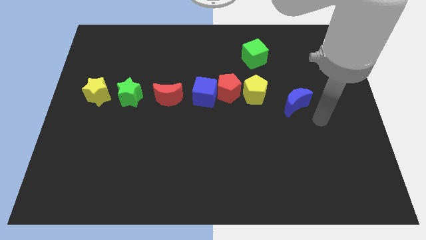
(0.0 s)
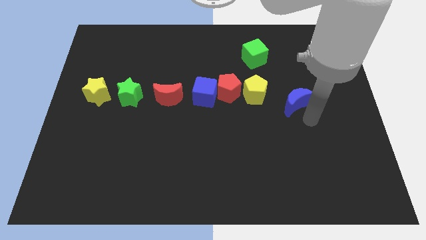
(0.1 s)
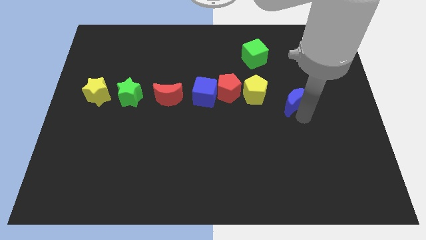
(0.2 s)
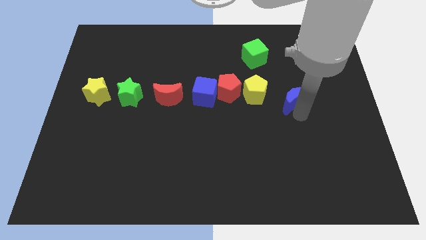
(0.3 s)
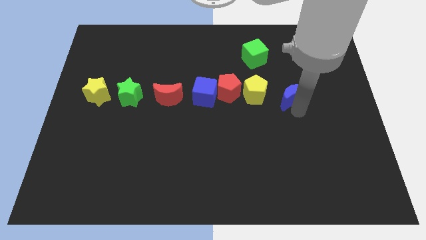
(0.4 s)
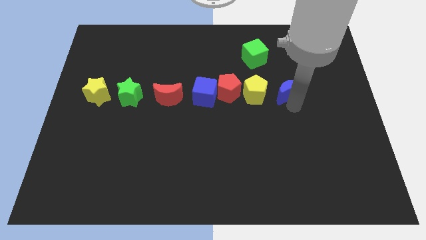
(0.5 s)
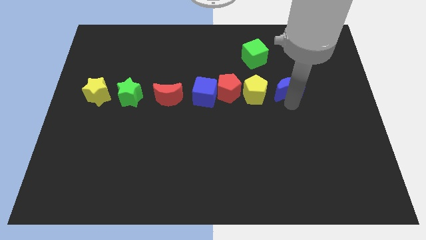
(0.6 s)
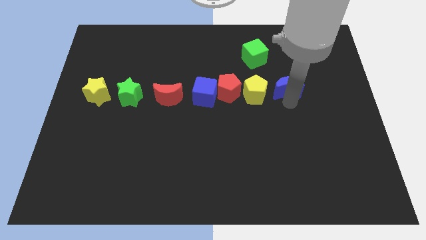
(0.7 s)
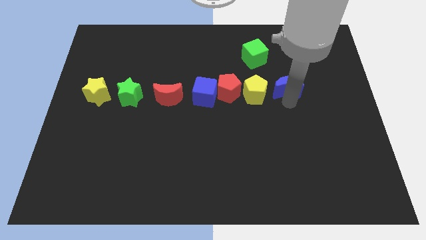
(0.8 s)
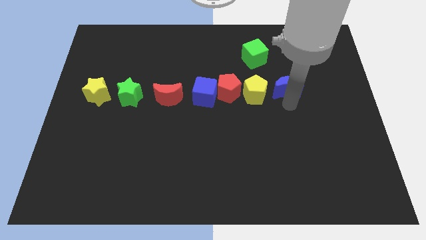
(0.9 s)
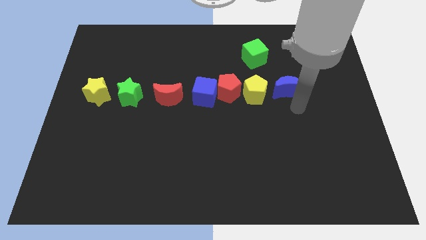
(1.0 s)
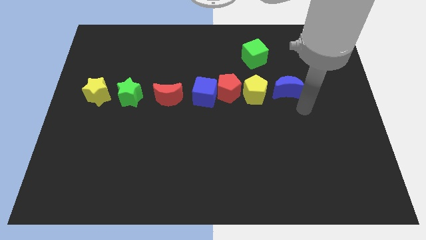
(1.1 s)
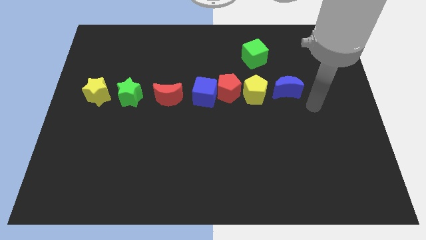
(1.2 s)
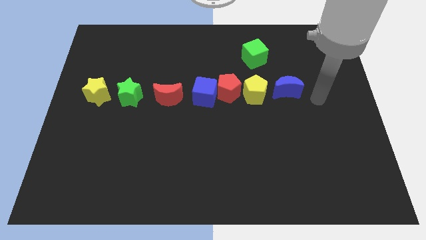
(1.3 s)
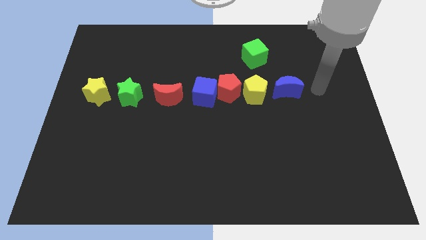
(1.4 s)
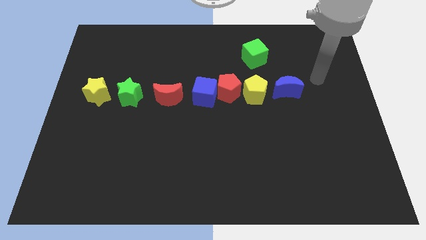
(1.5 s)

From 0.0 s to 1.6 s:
move the blue moon to the right side of the yellow pentagon

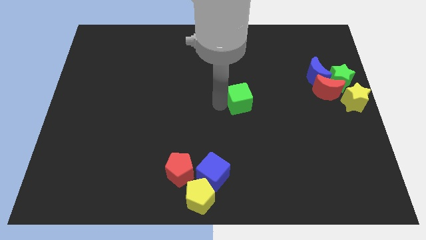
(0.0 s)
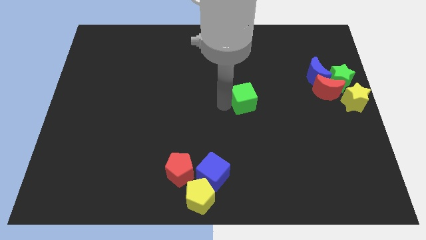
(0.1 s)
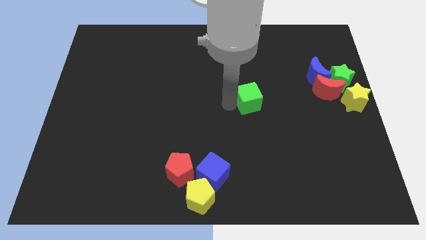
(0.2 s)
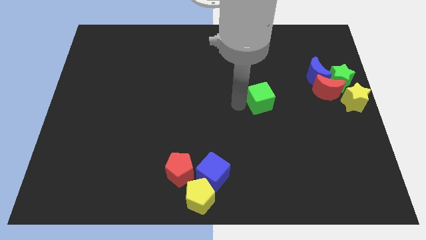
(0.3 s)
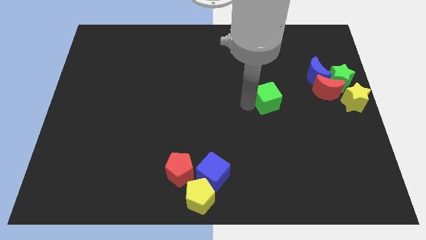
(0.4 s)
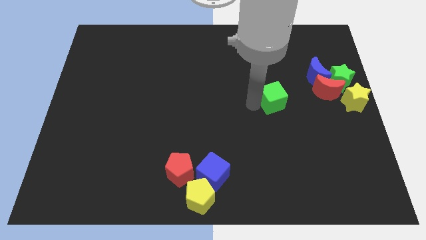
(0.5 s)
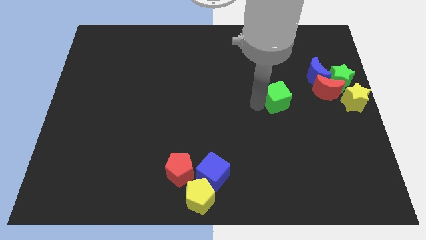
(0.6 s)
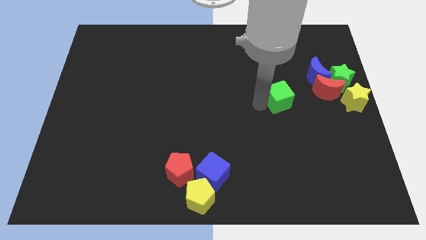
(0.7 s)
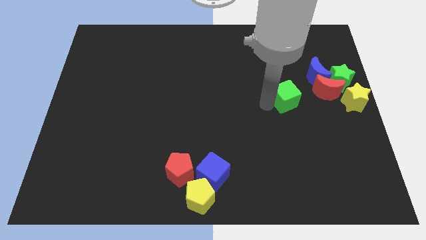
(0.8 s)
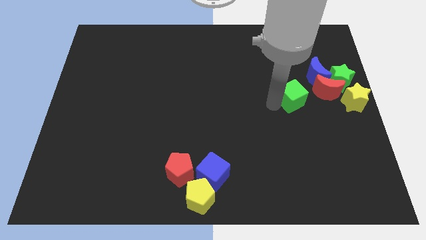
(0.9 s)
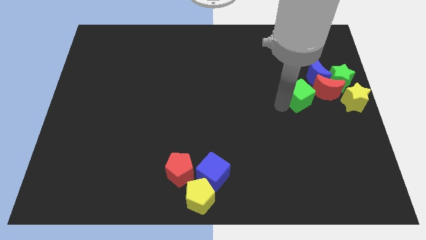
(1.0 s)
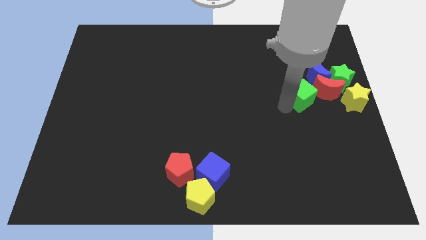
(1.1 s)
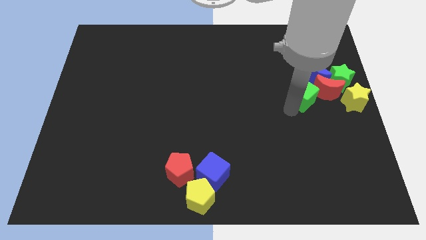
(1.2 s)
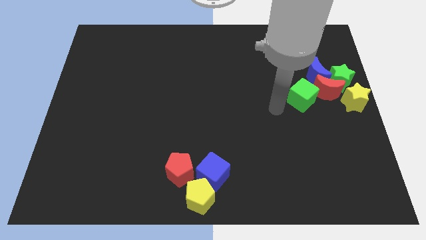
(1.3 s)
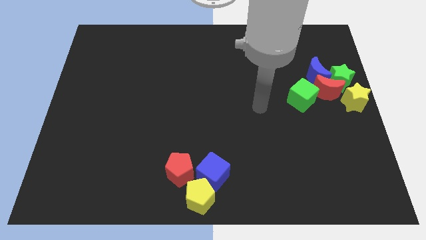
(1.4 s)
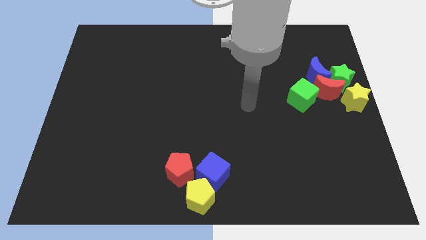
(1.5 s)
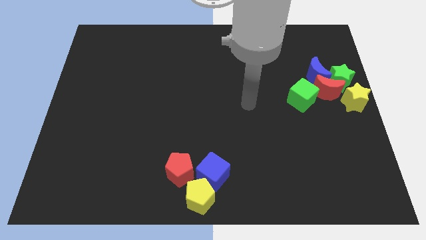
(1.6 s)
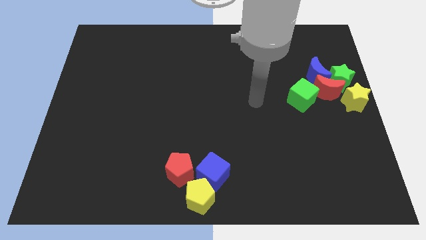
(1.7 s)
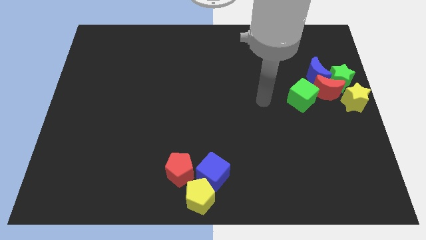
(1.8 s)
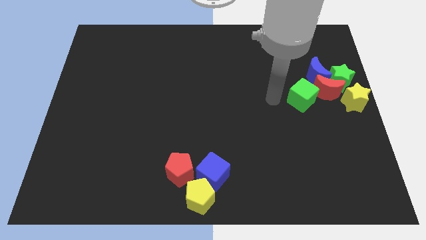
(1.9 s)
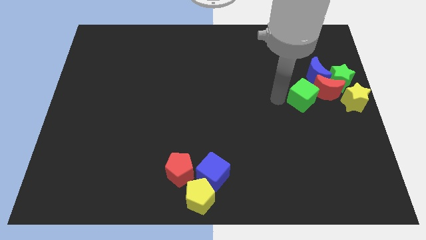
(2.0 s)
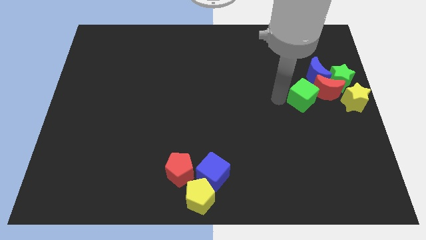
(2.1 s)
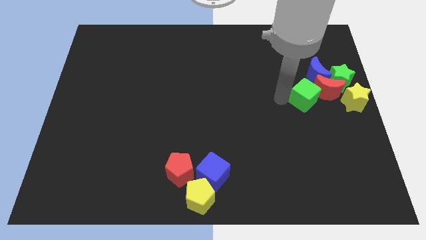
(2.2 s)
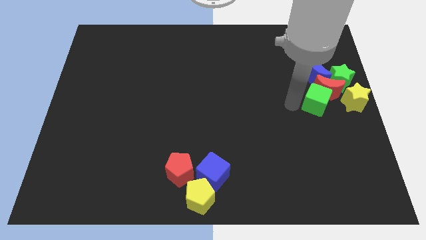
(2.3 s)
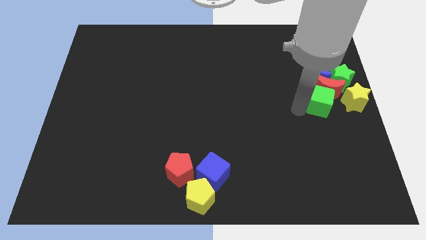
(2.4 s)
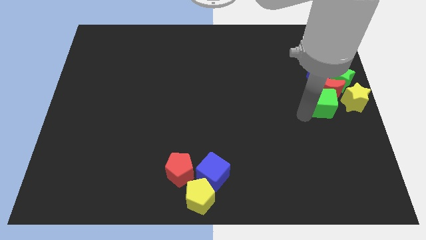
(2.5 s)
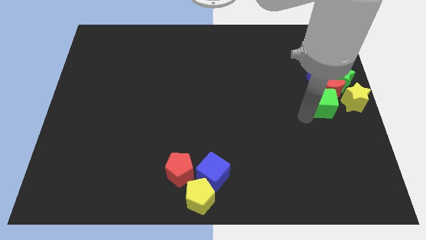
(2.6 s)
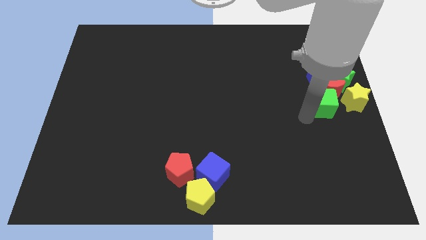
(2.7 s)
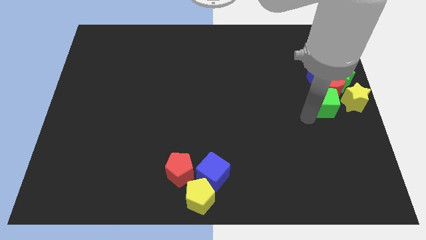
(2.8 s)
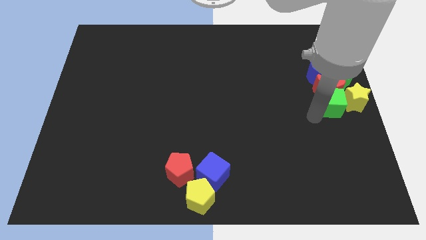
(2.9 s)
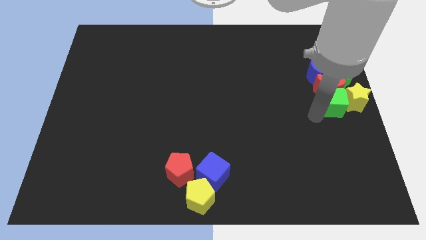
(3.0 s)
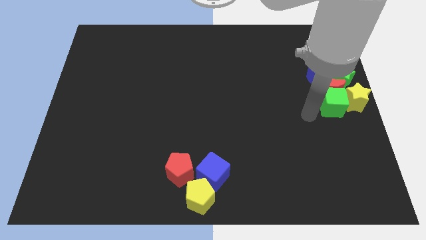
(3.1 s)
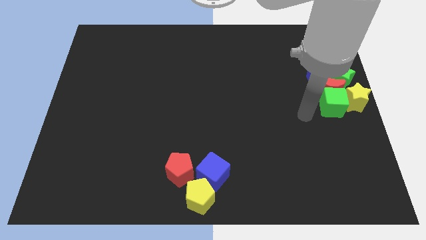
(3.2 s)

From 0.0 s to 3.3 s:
move green cube into the group of blocks

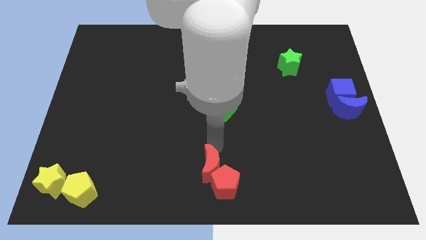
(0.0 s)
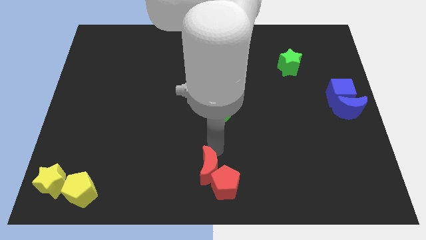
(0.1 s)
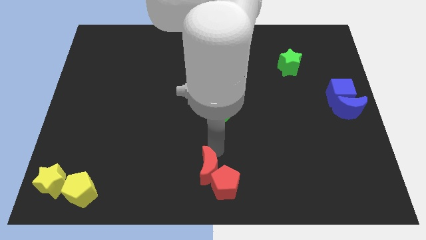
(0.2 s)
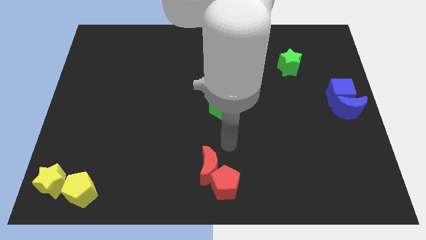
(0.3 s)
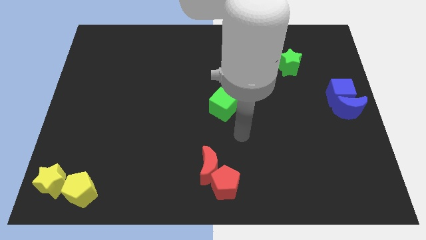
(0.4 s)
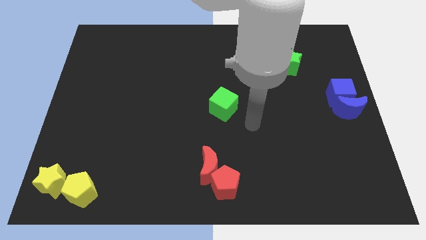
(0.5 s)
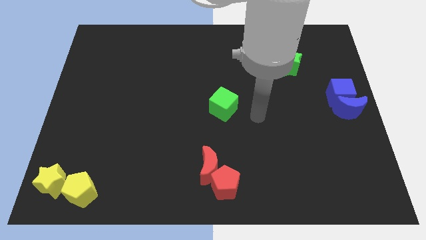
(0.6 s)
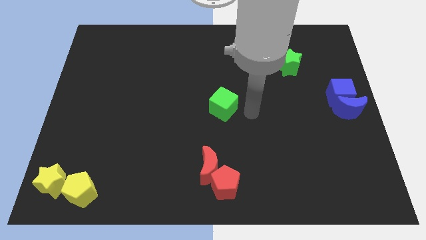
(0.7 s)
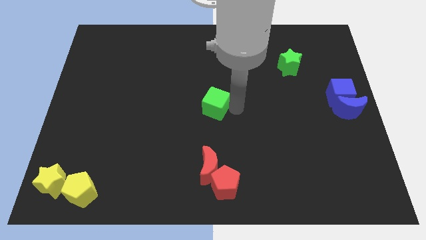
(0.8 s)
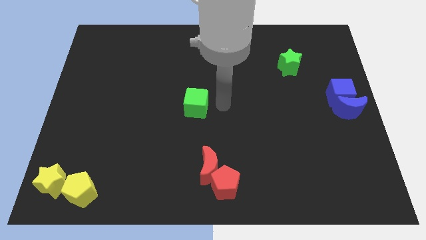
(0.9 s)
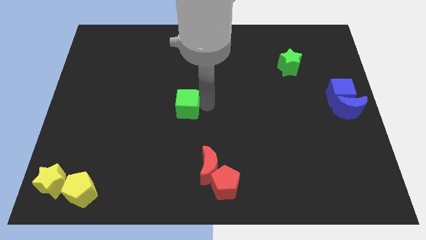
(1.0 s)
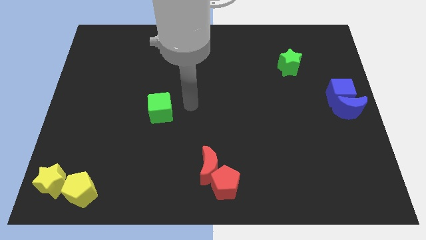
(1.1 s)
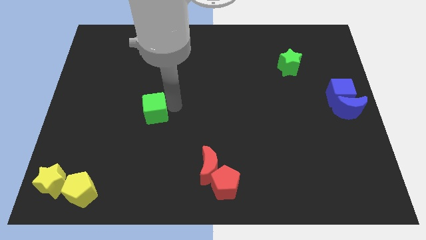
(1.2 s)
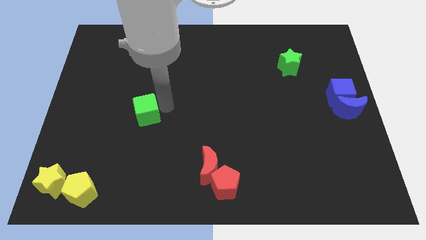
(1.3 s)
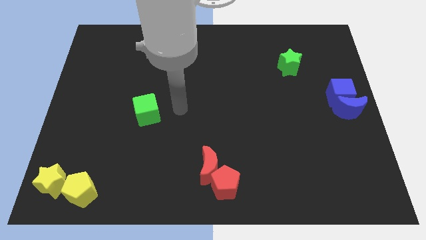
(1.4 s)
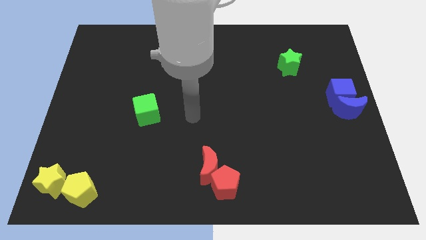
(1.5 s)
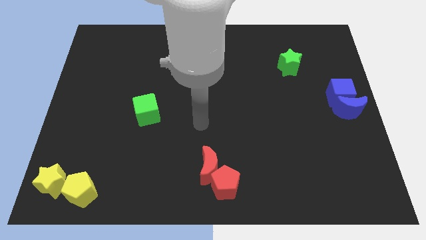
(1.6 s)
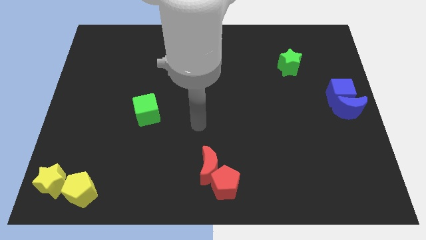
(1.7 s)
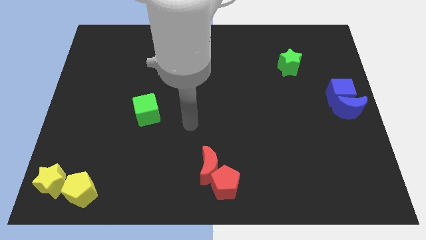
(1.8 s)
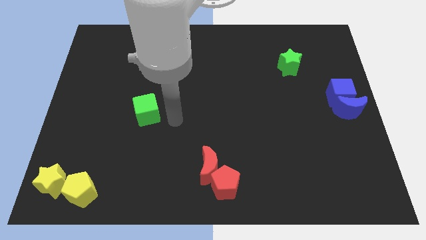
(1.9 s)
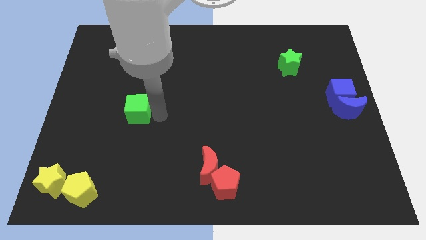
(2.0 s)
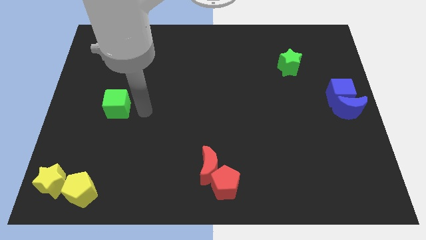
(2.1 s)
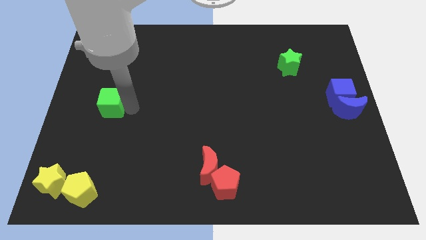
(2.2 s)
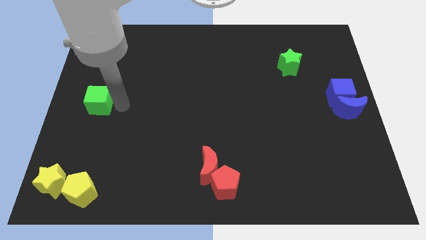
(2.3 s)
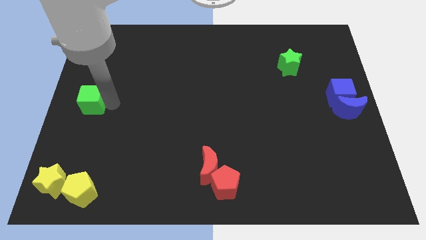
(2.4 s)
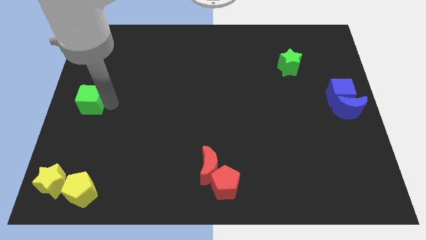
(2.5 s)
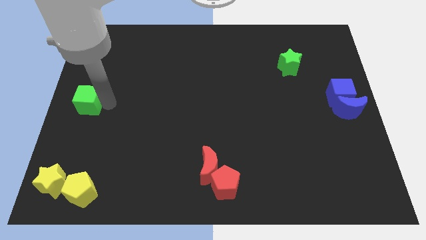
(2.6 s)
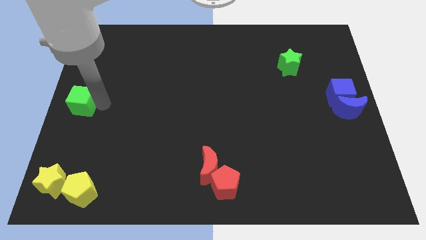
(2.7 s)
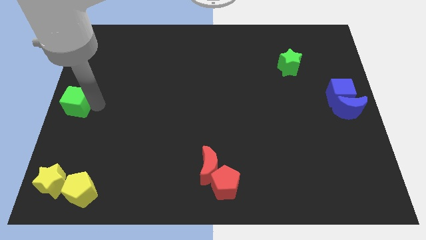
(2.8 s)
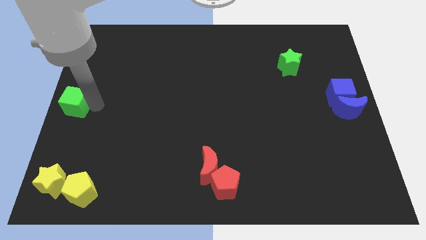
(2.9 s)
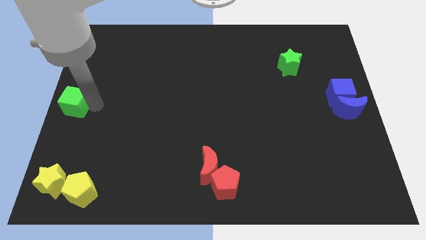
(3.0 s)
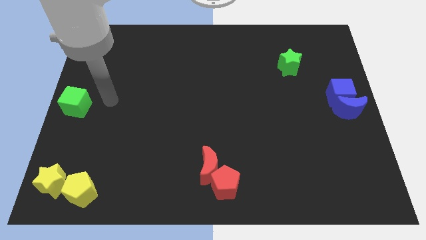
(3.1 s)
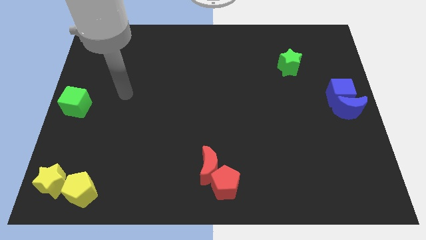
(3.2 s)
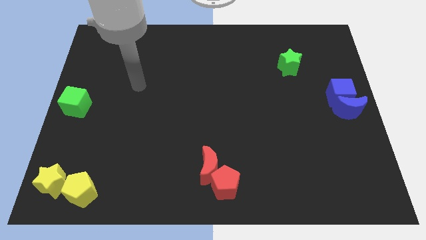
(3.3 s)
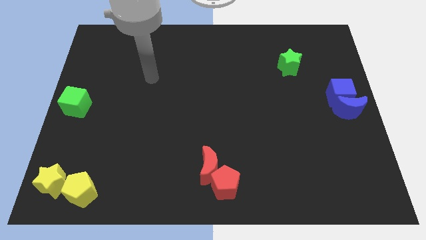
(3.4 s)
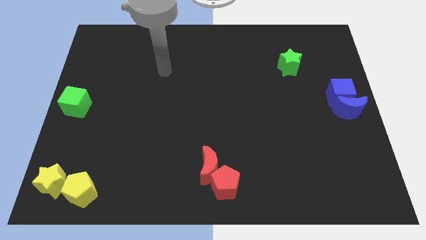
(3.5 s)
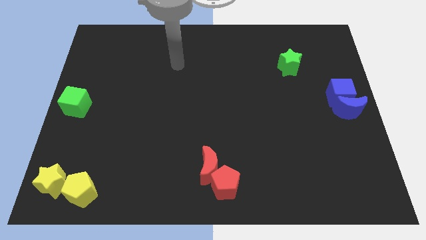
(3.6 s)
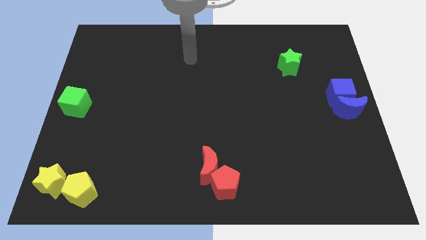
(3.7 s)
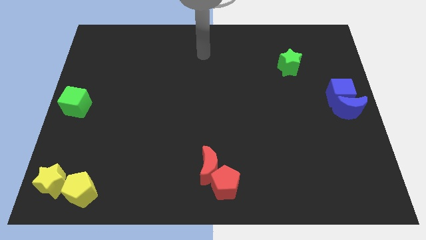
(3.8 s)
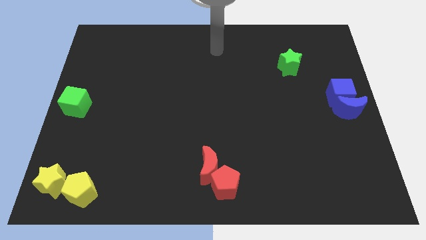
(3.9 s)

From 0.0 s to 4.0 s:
move green cube to the center left
